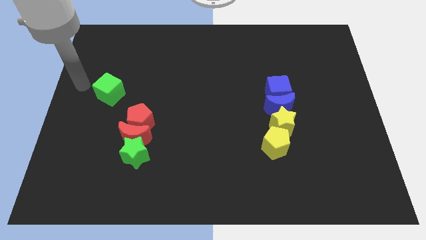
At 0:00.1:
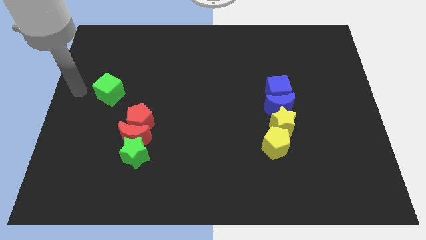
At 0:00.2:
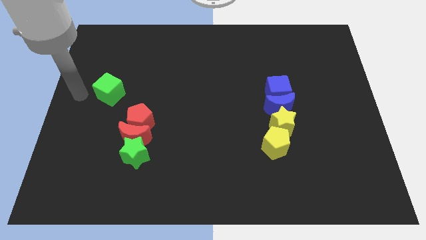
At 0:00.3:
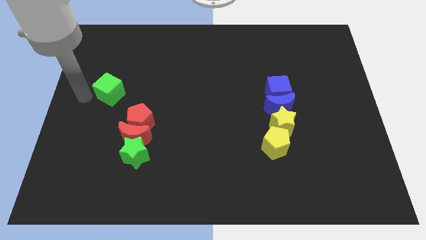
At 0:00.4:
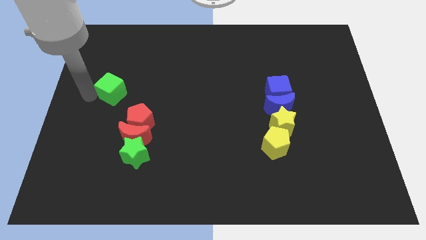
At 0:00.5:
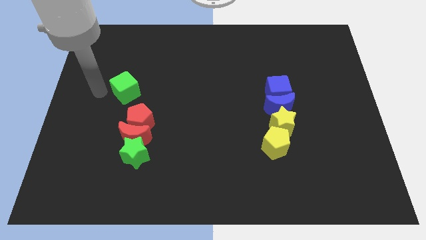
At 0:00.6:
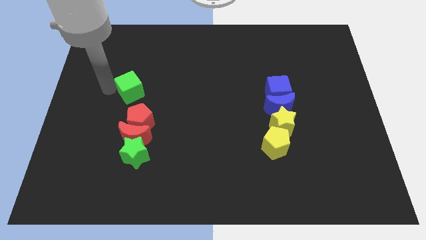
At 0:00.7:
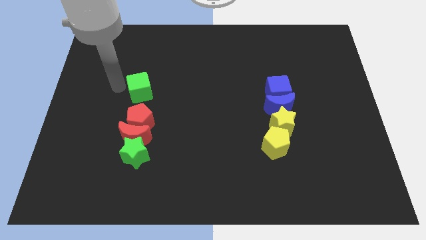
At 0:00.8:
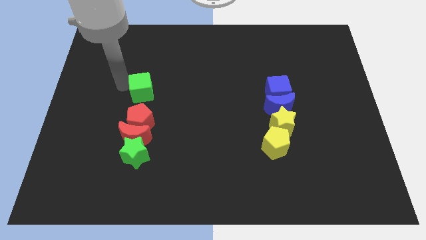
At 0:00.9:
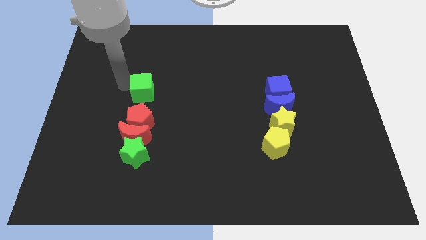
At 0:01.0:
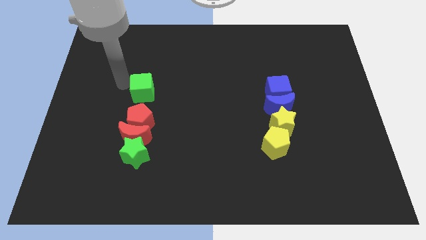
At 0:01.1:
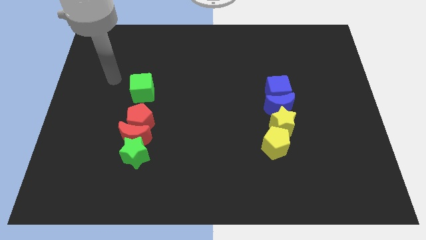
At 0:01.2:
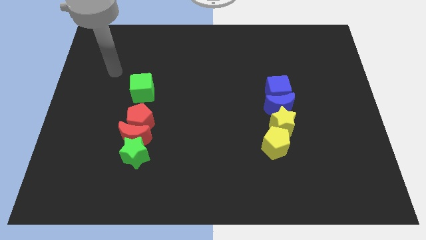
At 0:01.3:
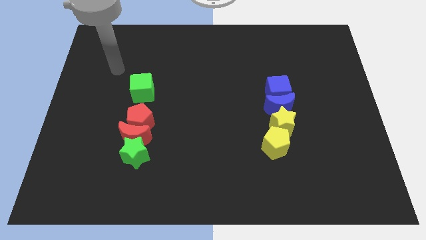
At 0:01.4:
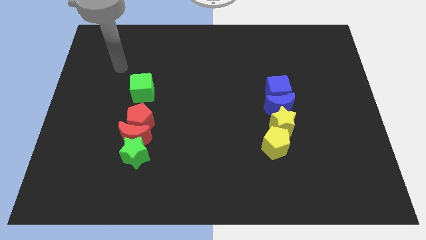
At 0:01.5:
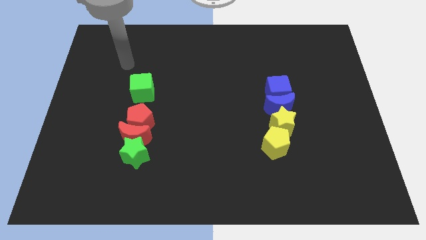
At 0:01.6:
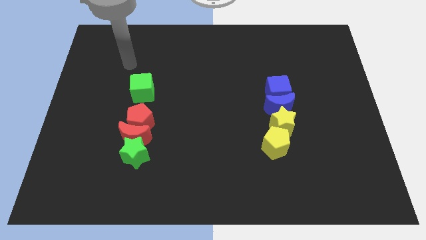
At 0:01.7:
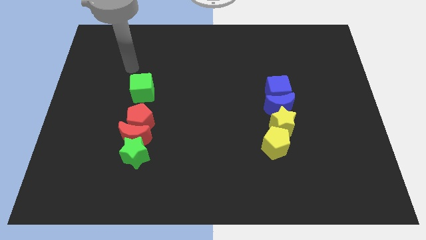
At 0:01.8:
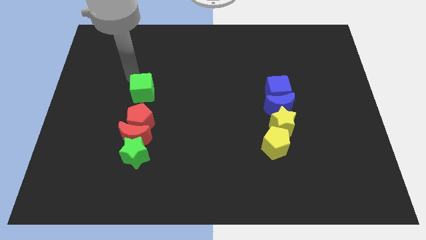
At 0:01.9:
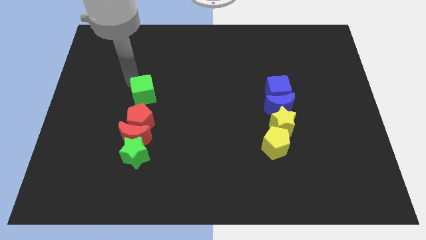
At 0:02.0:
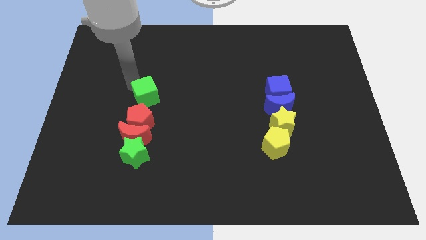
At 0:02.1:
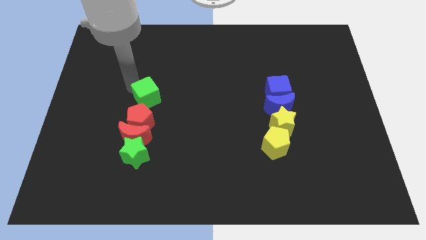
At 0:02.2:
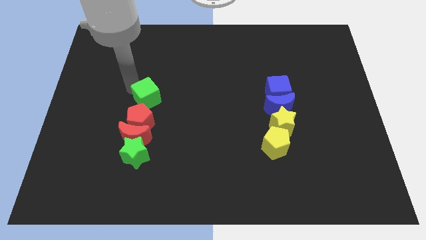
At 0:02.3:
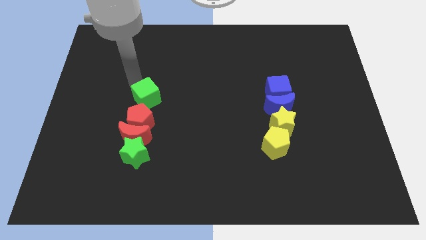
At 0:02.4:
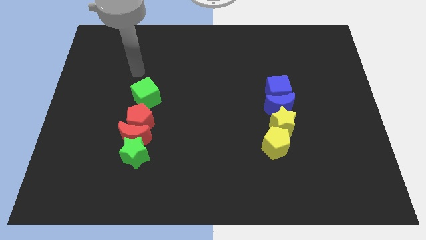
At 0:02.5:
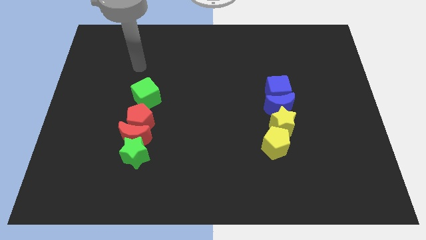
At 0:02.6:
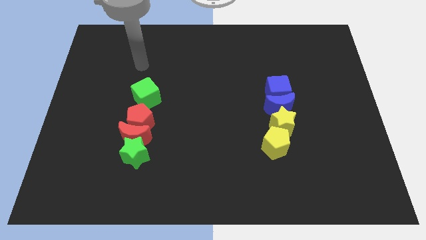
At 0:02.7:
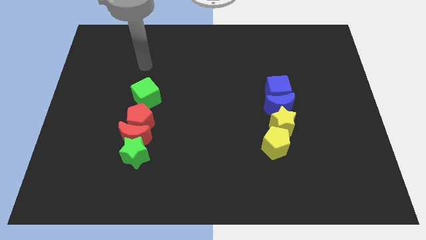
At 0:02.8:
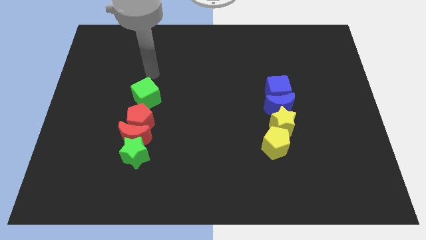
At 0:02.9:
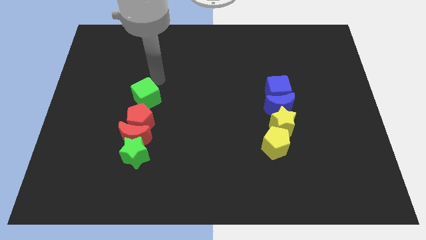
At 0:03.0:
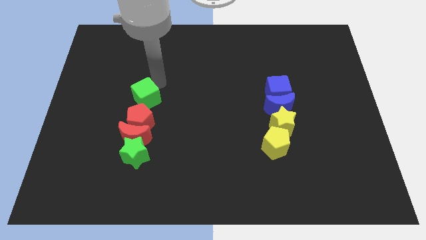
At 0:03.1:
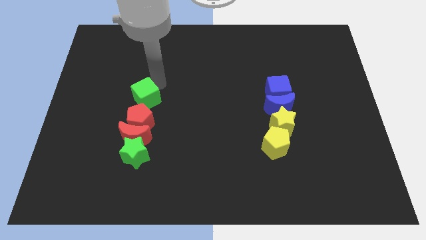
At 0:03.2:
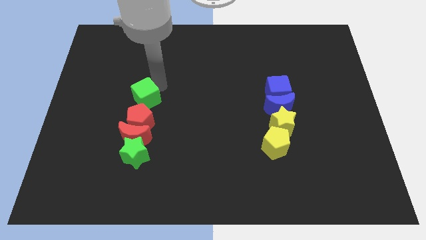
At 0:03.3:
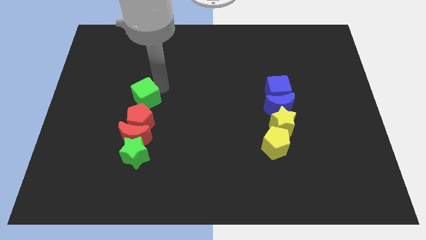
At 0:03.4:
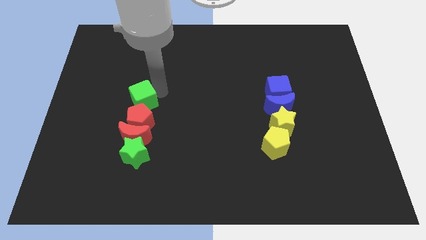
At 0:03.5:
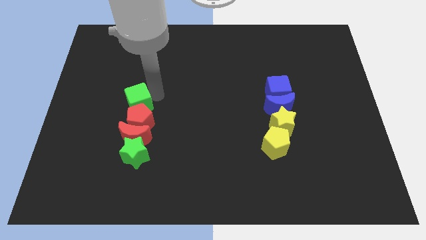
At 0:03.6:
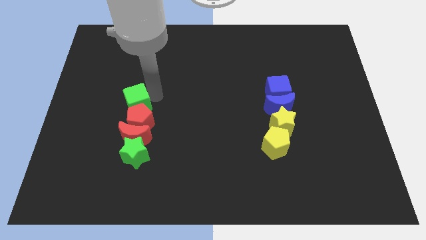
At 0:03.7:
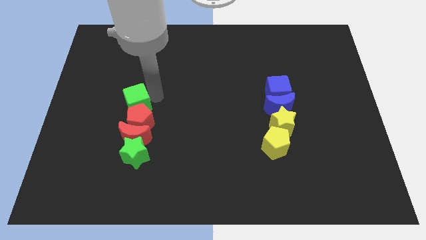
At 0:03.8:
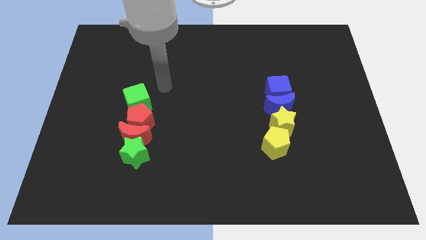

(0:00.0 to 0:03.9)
push the green cube vertically above the red pentagon

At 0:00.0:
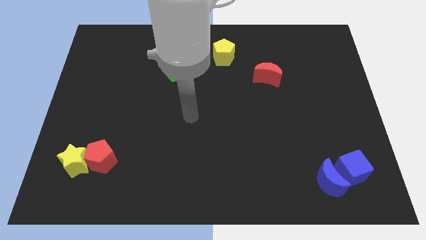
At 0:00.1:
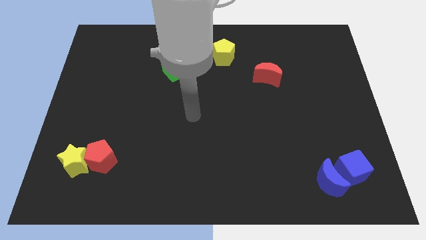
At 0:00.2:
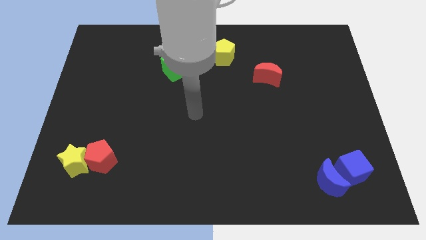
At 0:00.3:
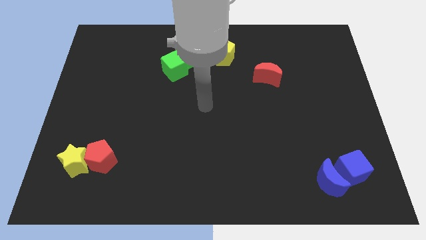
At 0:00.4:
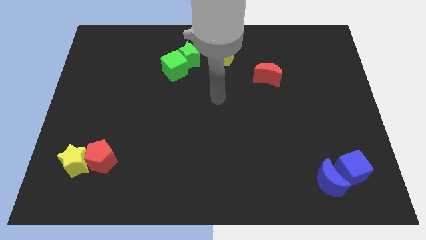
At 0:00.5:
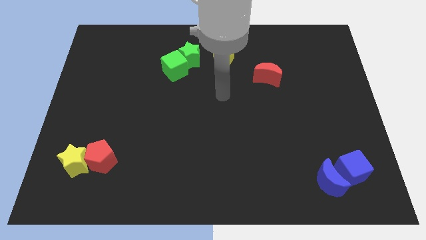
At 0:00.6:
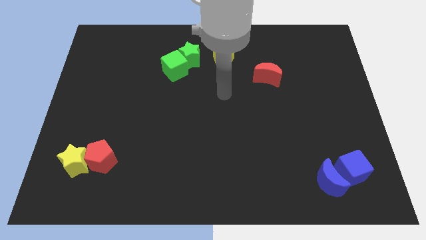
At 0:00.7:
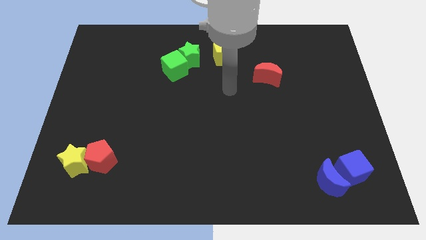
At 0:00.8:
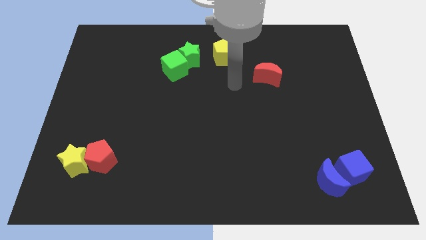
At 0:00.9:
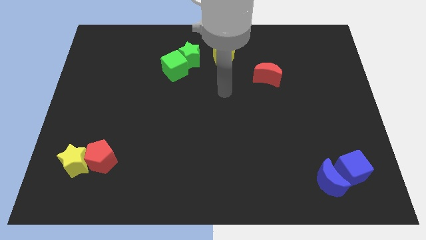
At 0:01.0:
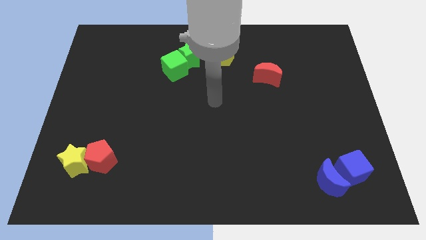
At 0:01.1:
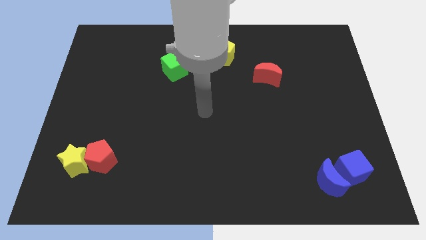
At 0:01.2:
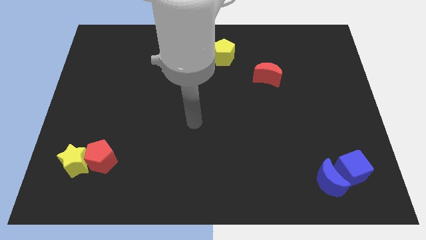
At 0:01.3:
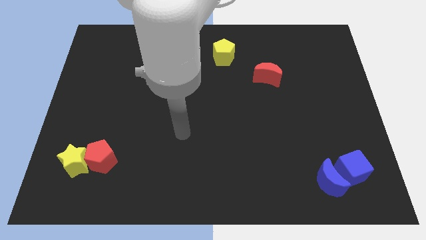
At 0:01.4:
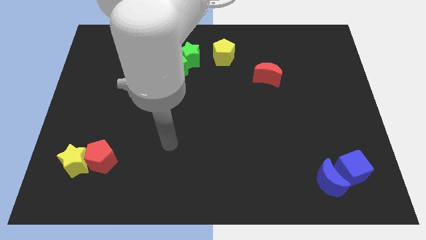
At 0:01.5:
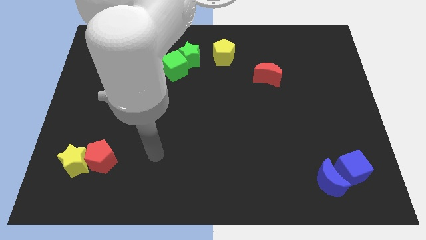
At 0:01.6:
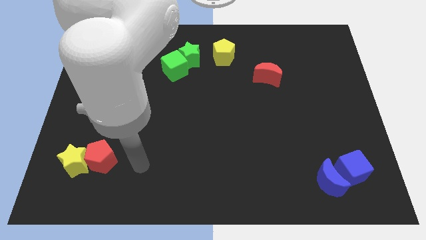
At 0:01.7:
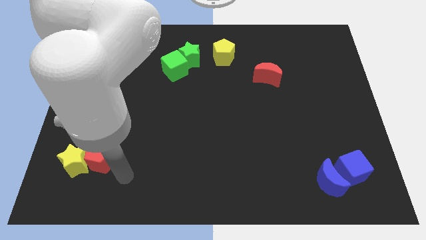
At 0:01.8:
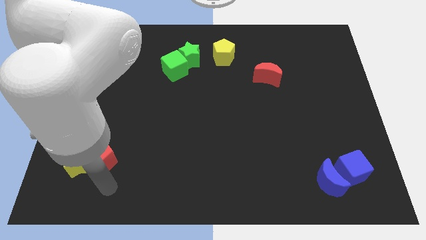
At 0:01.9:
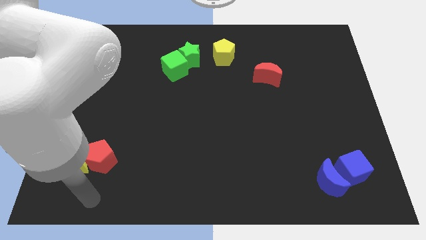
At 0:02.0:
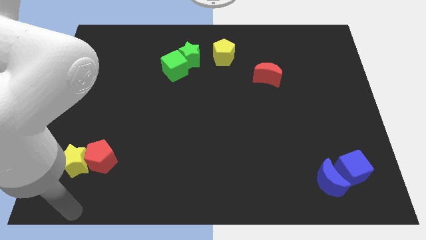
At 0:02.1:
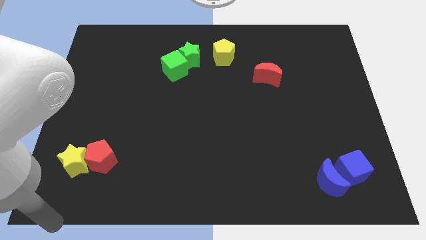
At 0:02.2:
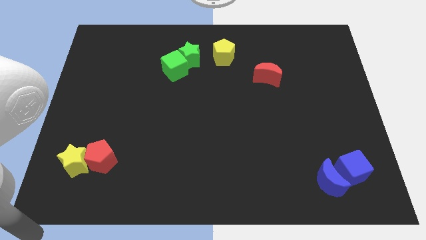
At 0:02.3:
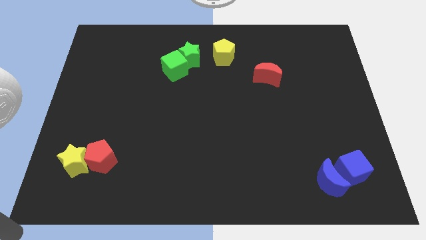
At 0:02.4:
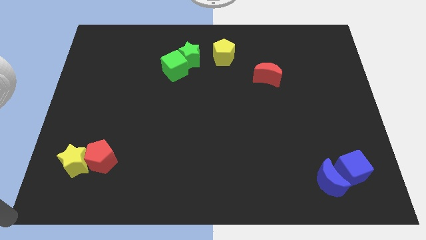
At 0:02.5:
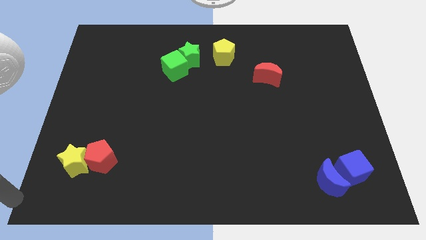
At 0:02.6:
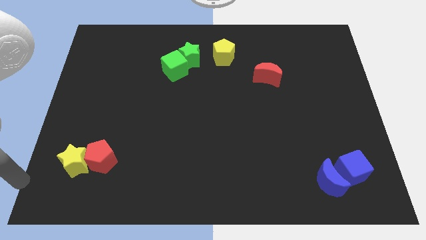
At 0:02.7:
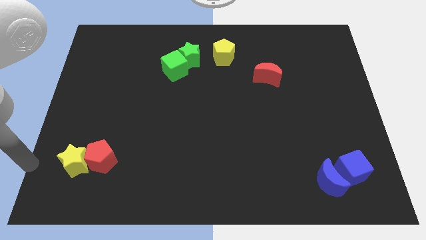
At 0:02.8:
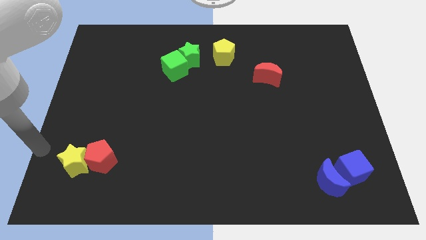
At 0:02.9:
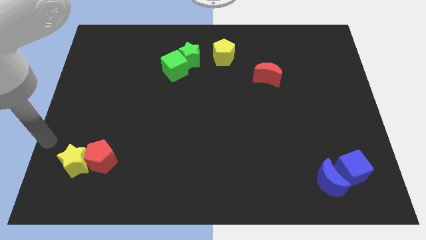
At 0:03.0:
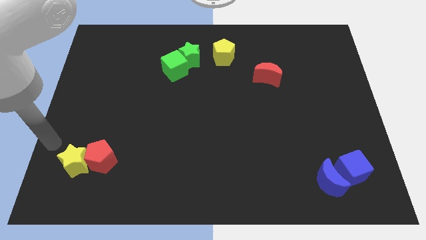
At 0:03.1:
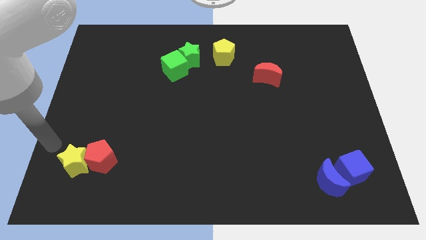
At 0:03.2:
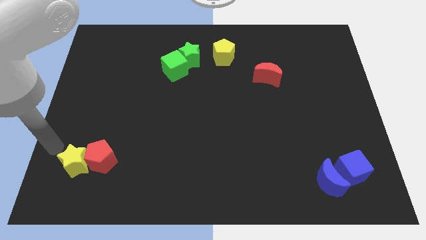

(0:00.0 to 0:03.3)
point your hand at the top left side of the yellow star

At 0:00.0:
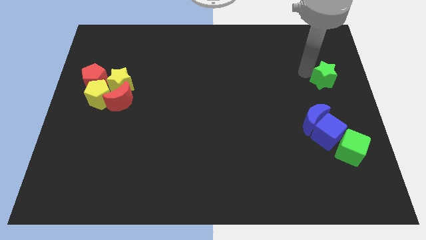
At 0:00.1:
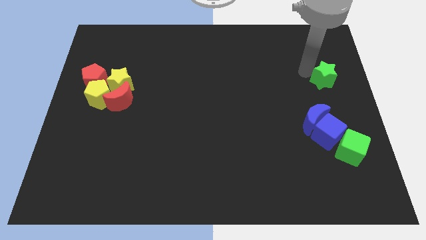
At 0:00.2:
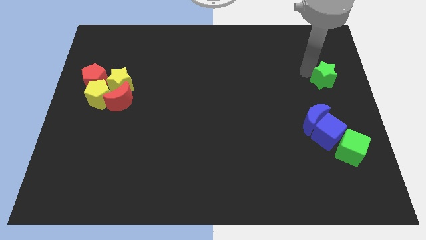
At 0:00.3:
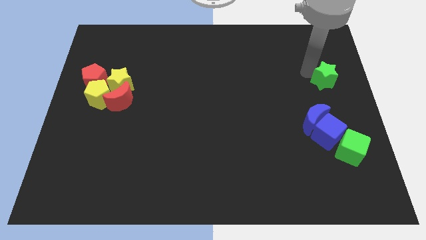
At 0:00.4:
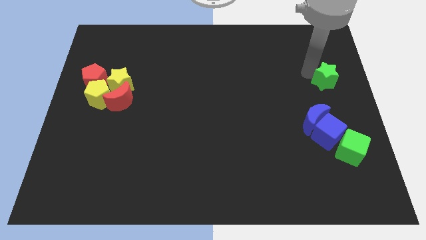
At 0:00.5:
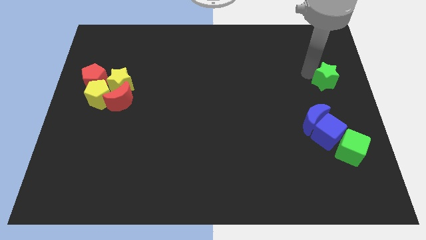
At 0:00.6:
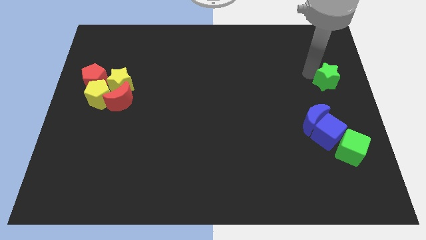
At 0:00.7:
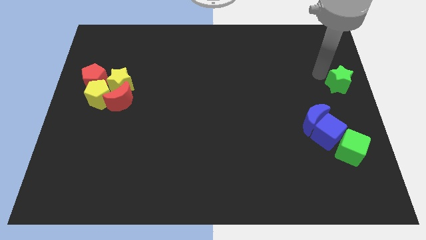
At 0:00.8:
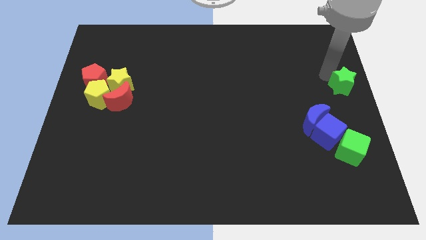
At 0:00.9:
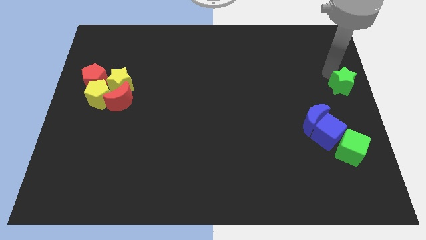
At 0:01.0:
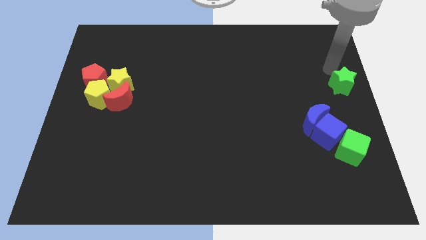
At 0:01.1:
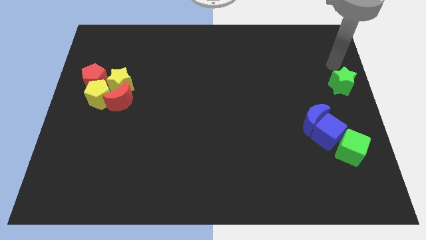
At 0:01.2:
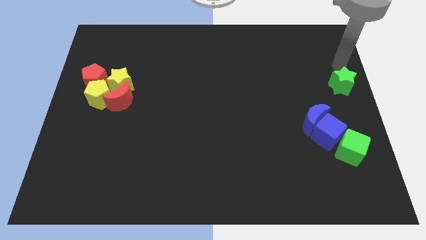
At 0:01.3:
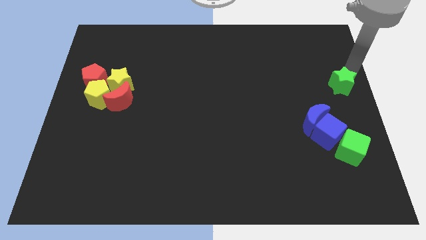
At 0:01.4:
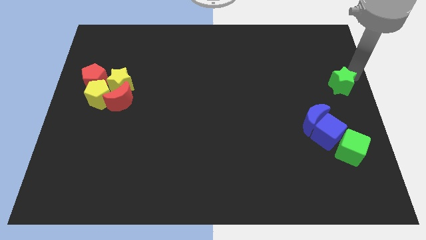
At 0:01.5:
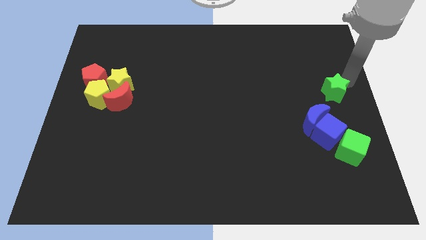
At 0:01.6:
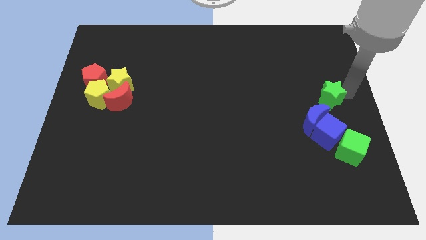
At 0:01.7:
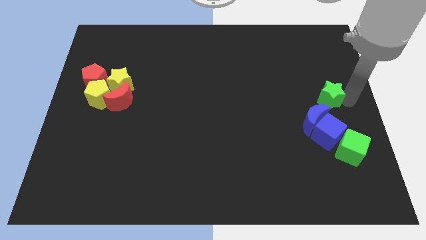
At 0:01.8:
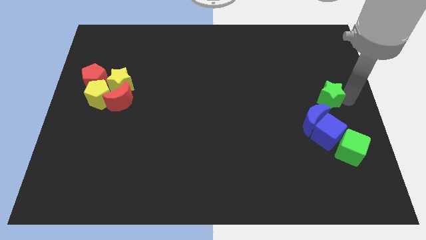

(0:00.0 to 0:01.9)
move the green star close to the blue moon
